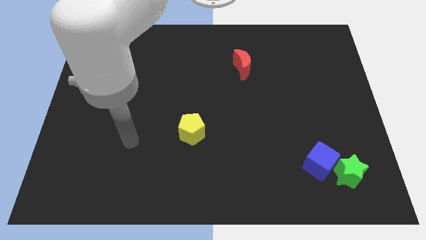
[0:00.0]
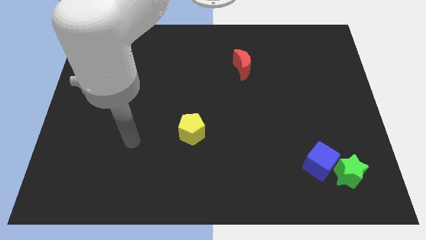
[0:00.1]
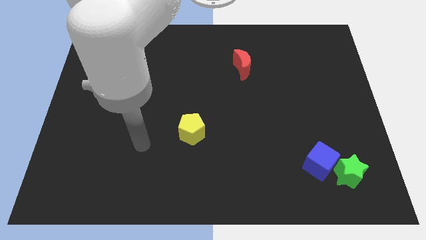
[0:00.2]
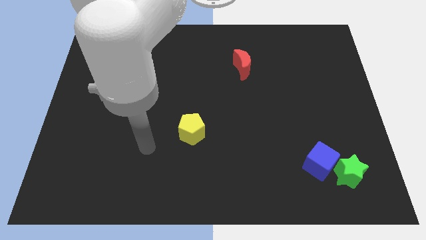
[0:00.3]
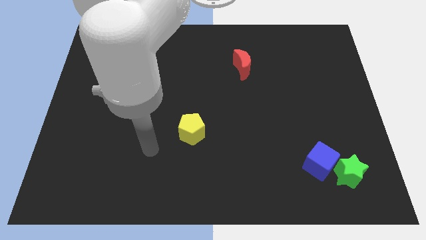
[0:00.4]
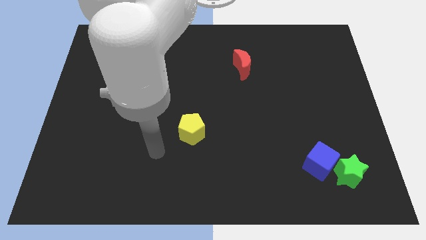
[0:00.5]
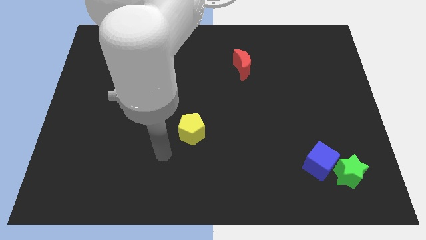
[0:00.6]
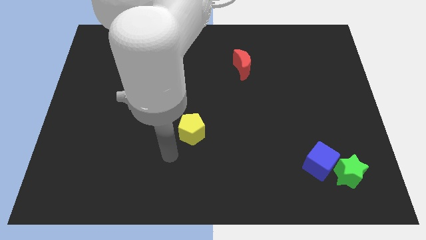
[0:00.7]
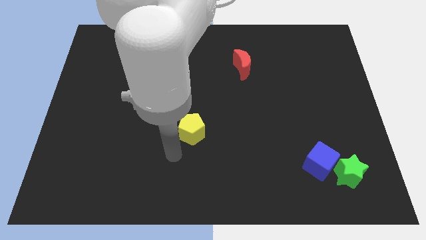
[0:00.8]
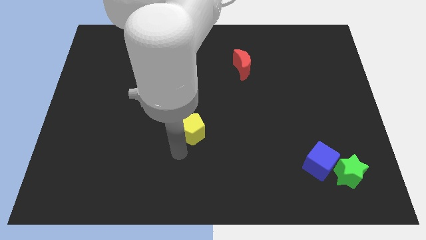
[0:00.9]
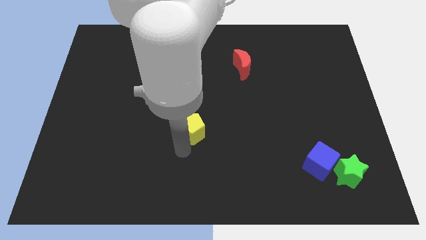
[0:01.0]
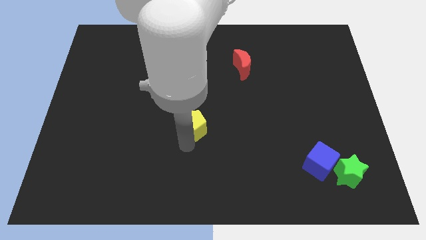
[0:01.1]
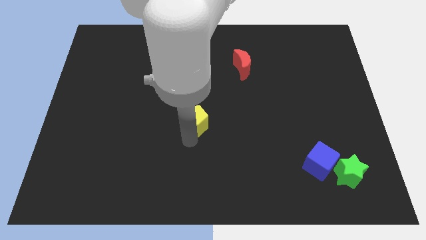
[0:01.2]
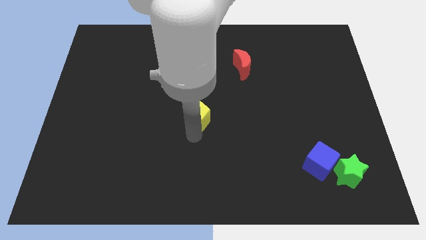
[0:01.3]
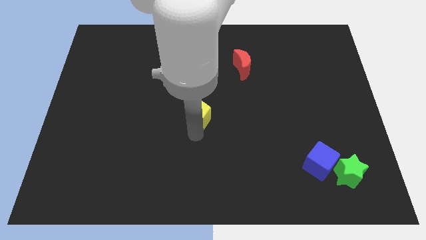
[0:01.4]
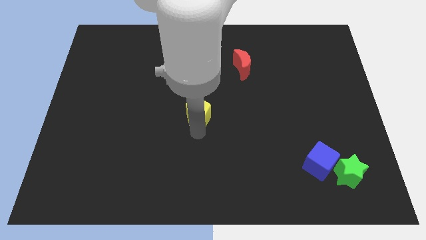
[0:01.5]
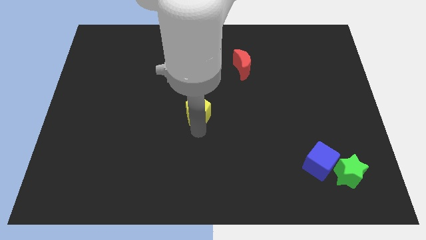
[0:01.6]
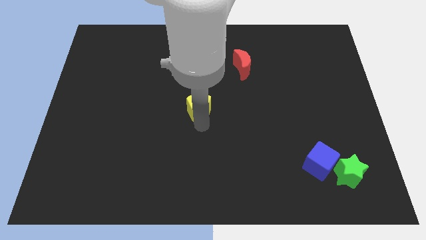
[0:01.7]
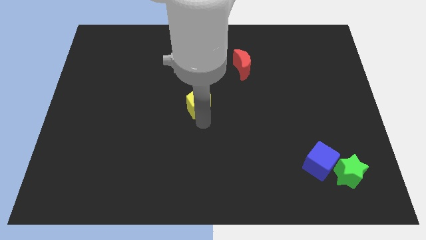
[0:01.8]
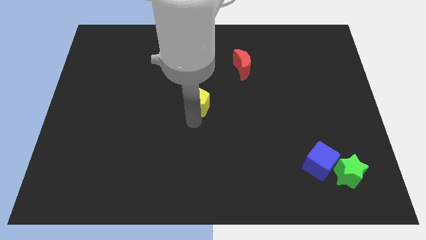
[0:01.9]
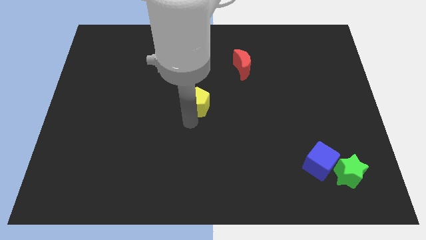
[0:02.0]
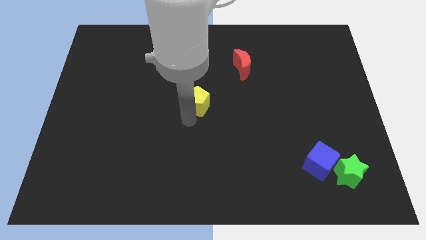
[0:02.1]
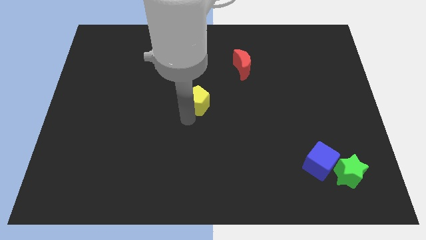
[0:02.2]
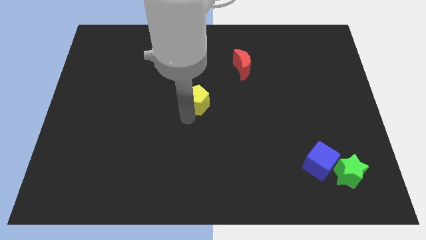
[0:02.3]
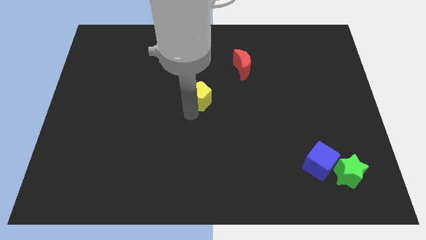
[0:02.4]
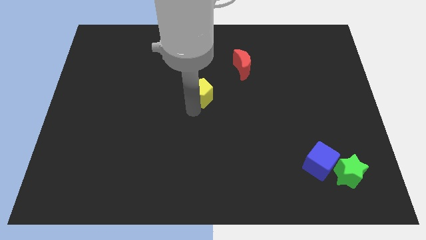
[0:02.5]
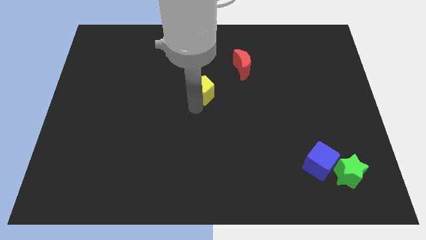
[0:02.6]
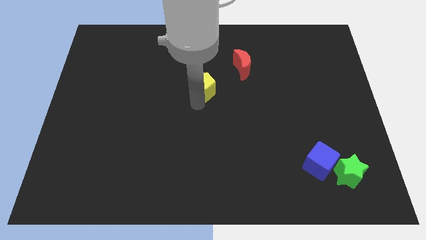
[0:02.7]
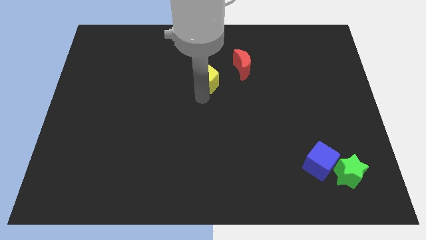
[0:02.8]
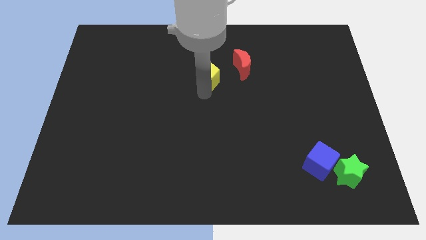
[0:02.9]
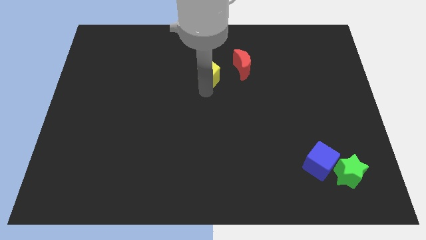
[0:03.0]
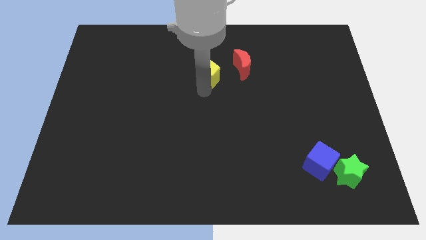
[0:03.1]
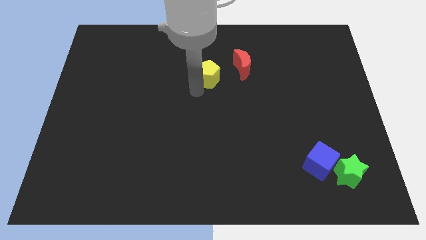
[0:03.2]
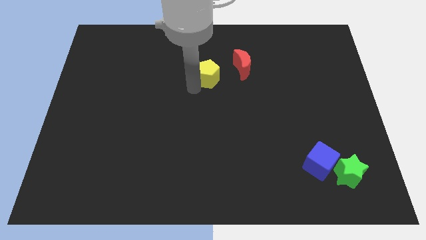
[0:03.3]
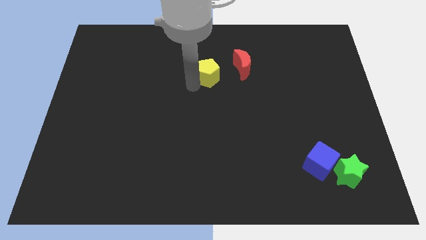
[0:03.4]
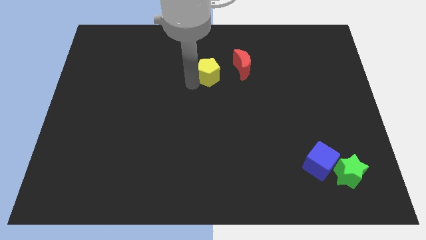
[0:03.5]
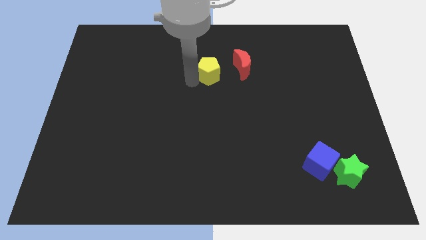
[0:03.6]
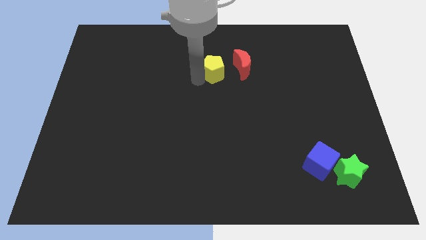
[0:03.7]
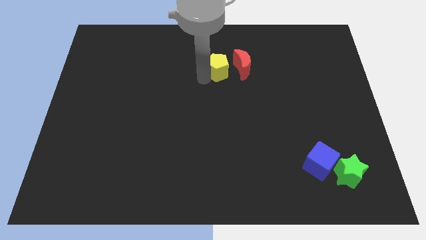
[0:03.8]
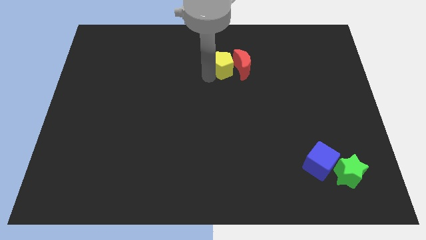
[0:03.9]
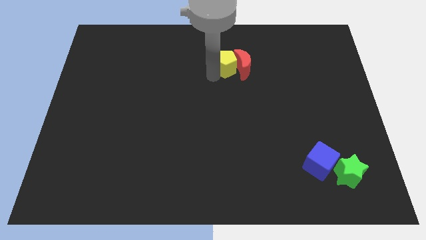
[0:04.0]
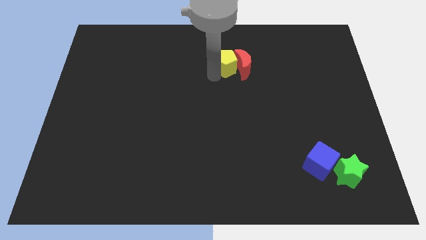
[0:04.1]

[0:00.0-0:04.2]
put the pentagon towards the red moon

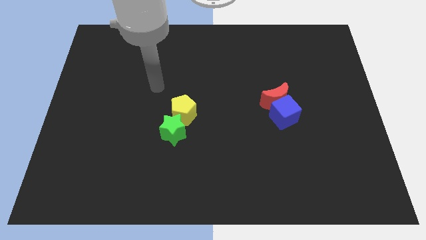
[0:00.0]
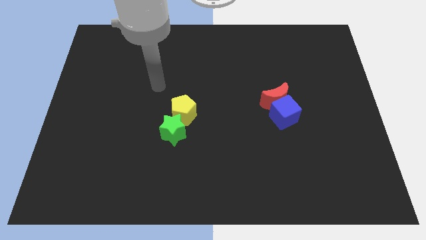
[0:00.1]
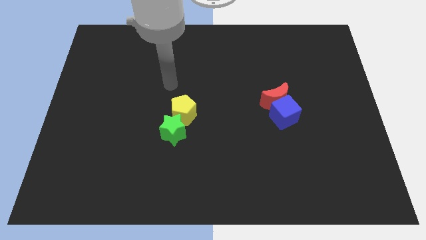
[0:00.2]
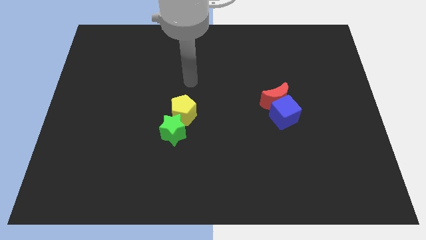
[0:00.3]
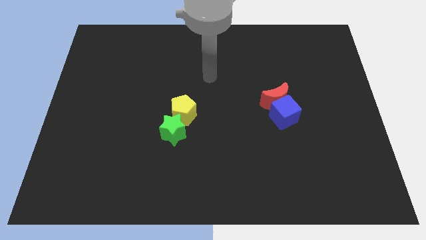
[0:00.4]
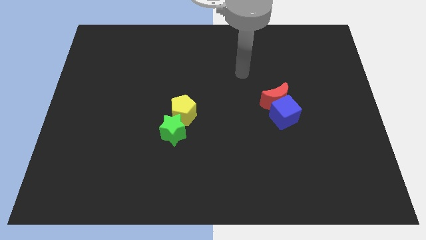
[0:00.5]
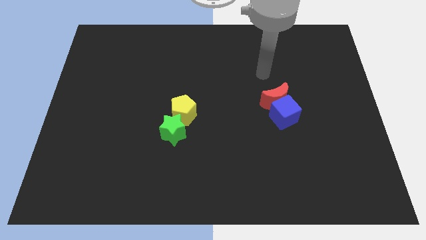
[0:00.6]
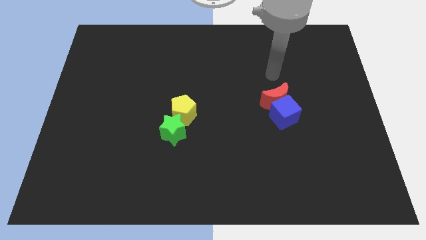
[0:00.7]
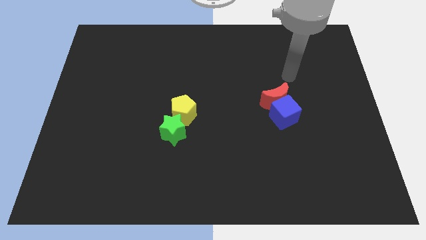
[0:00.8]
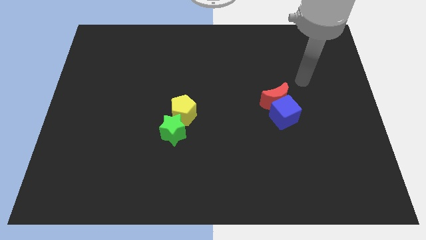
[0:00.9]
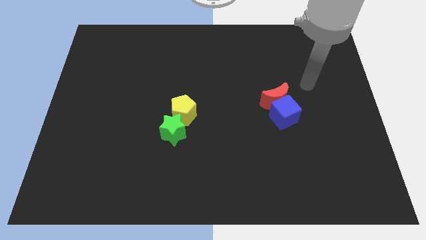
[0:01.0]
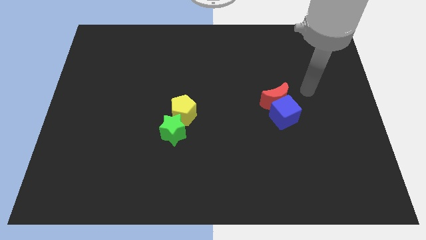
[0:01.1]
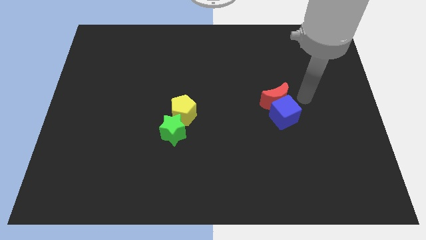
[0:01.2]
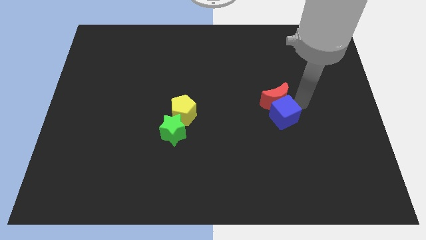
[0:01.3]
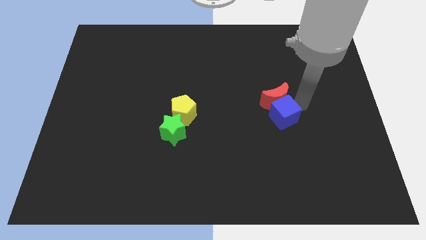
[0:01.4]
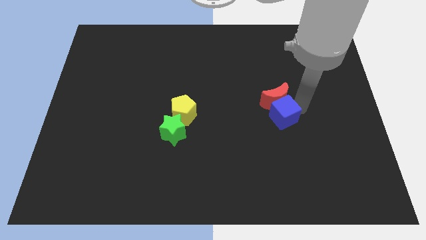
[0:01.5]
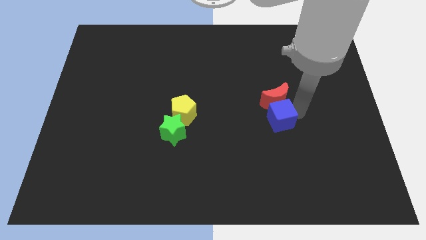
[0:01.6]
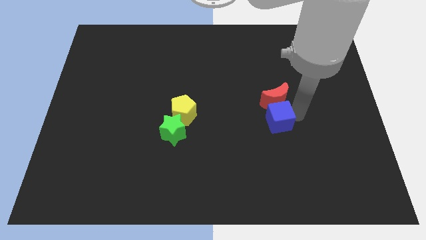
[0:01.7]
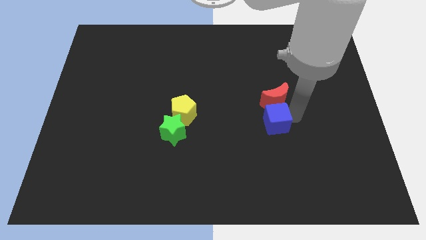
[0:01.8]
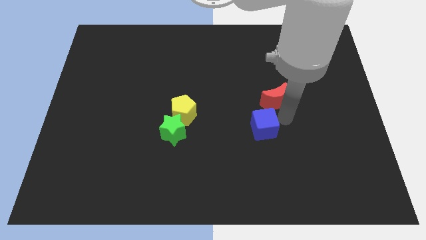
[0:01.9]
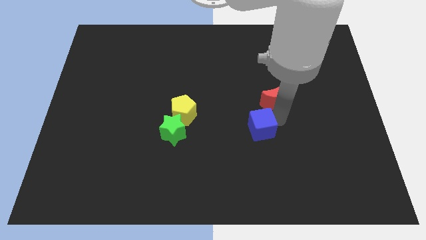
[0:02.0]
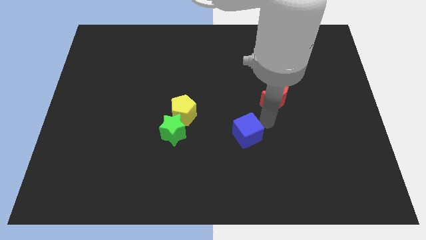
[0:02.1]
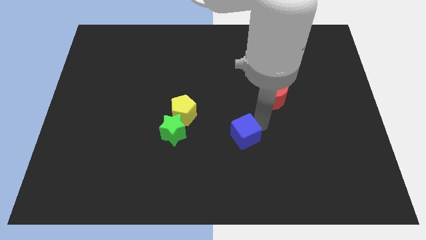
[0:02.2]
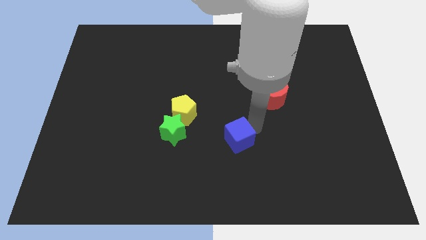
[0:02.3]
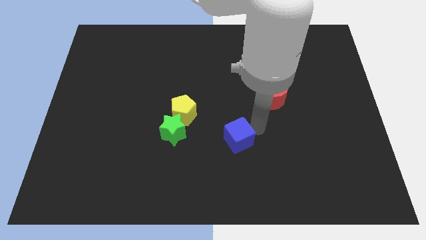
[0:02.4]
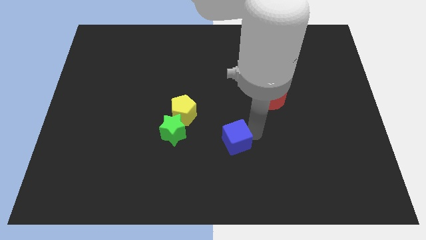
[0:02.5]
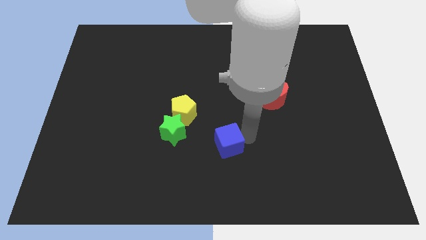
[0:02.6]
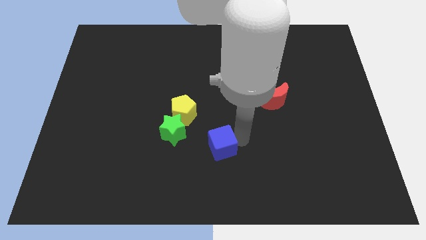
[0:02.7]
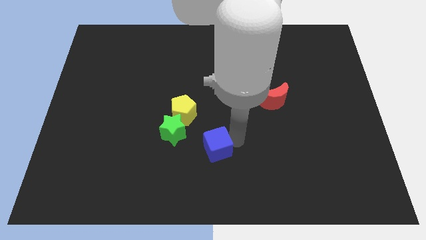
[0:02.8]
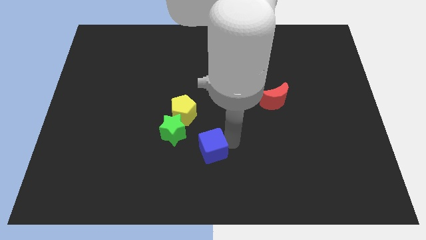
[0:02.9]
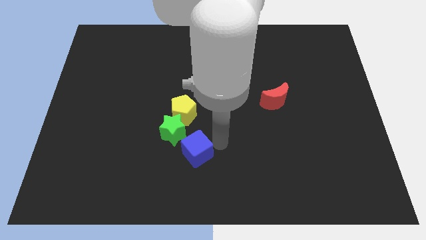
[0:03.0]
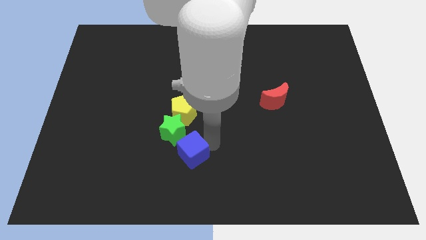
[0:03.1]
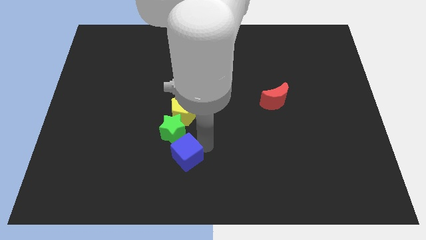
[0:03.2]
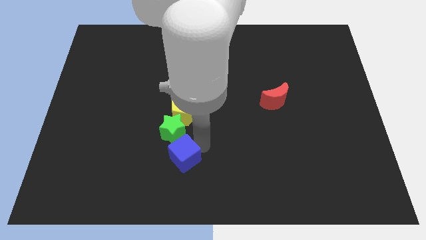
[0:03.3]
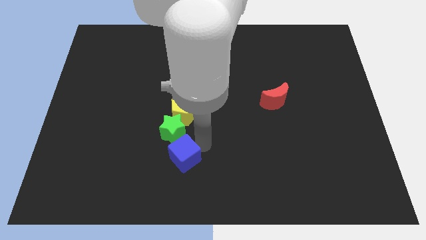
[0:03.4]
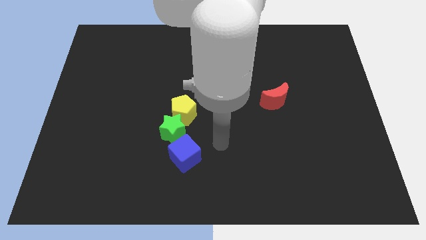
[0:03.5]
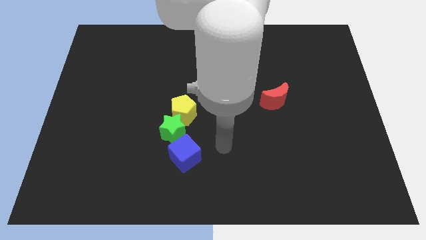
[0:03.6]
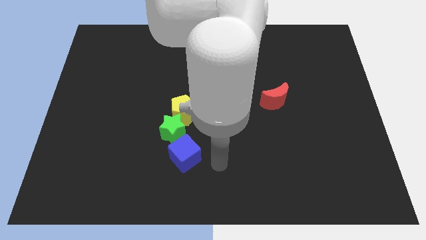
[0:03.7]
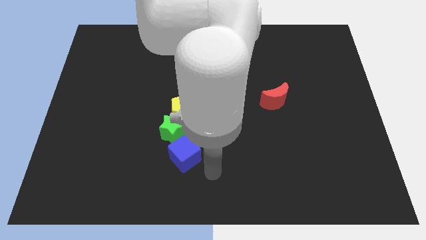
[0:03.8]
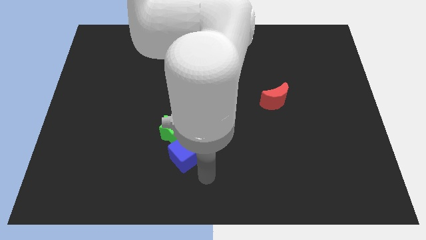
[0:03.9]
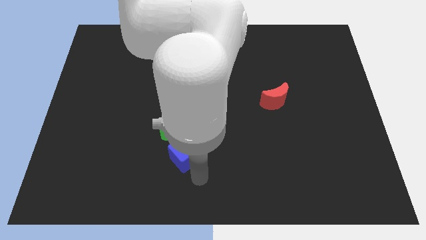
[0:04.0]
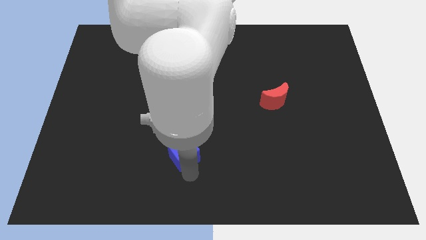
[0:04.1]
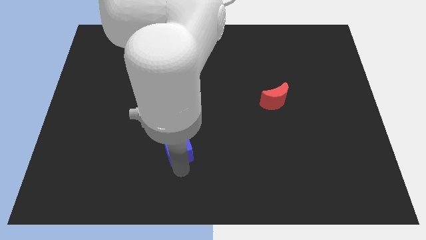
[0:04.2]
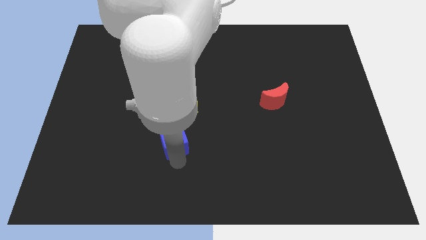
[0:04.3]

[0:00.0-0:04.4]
slide the cube next to the star
